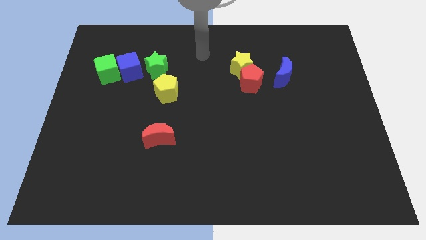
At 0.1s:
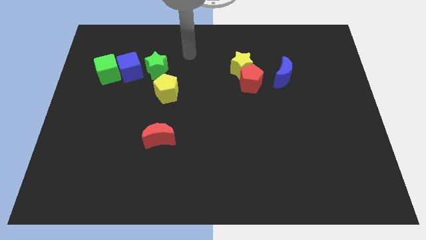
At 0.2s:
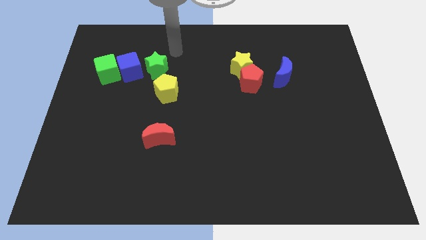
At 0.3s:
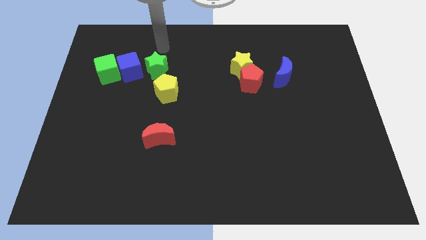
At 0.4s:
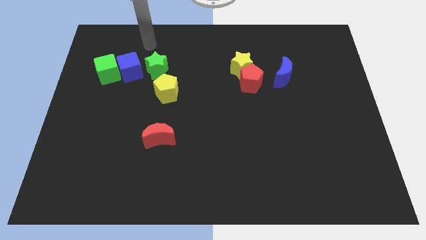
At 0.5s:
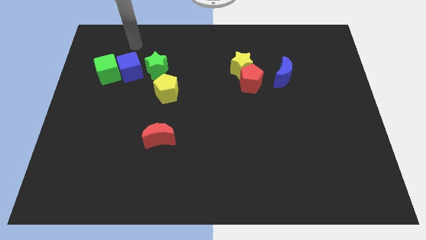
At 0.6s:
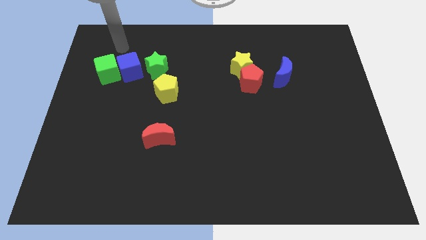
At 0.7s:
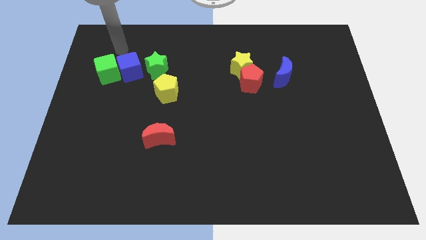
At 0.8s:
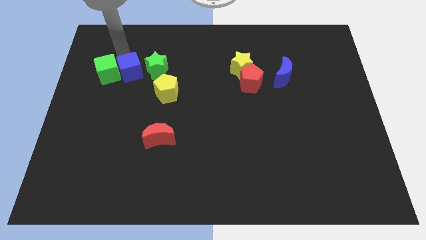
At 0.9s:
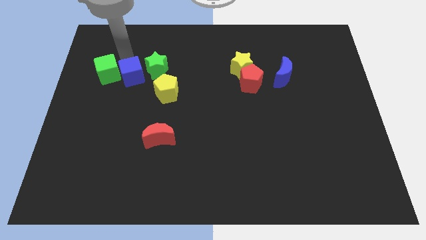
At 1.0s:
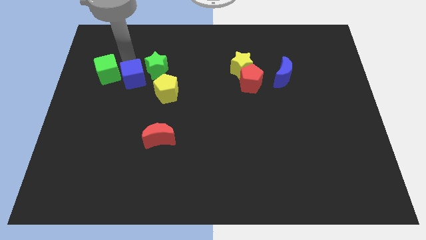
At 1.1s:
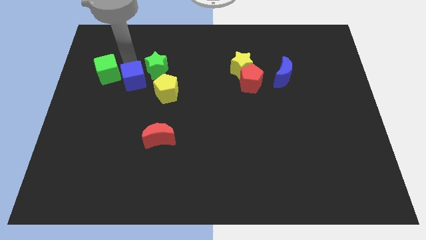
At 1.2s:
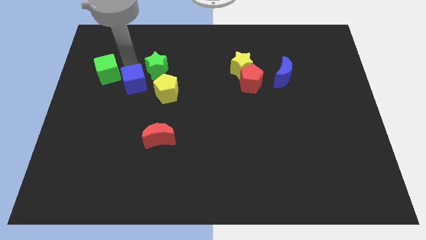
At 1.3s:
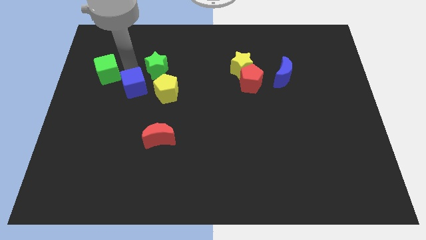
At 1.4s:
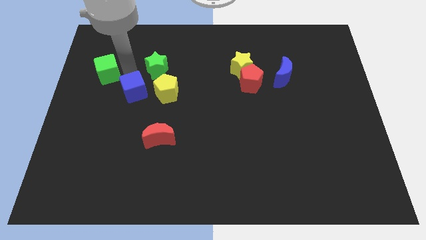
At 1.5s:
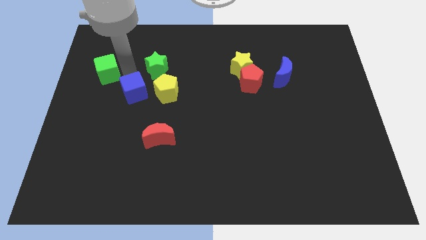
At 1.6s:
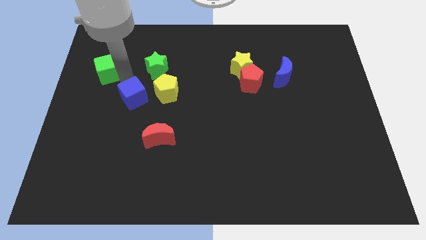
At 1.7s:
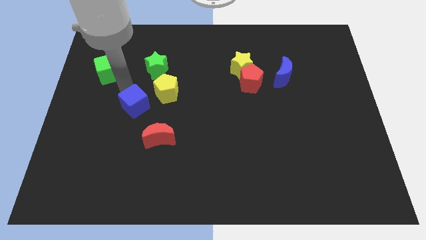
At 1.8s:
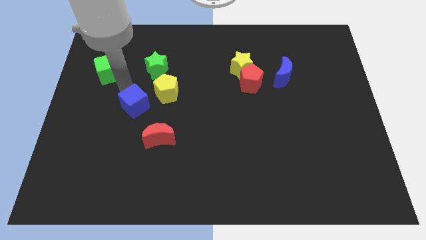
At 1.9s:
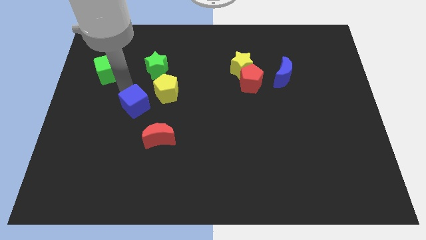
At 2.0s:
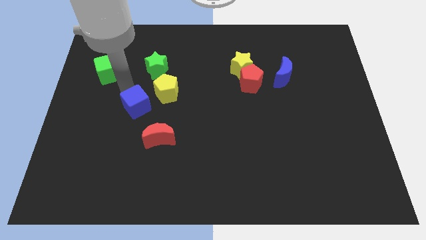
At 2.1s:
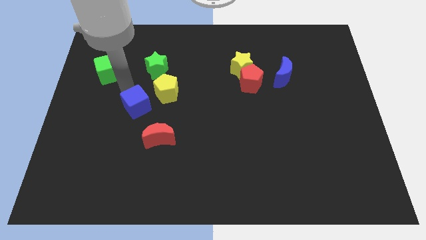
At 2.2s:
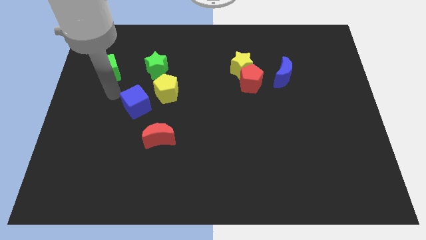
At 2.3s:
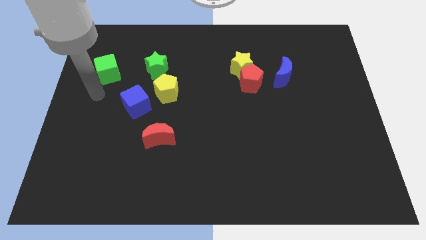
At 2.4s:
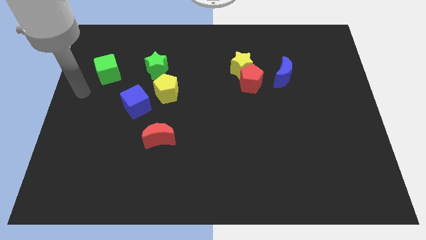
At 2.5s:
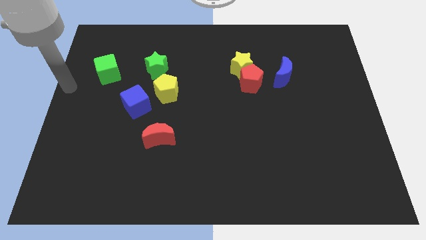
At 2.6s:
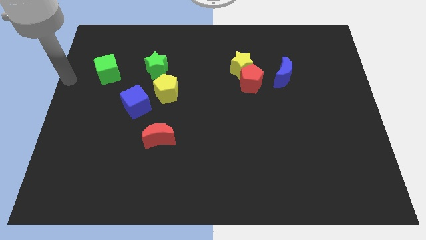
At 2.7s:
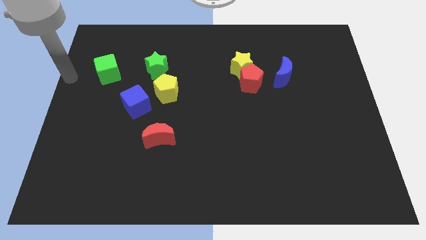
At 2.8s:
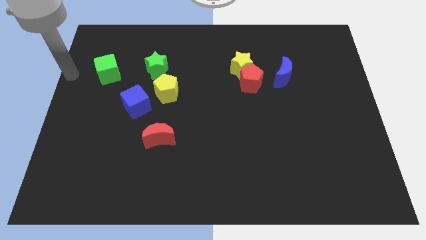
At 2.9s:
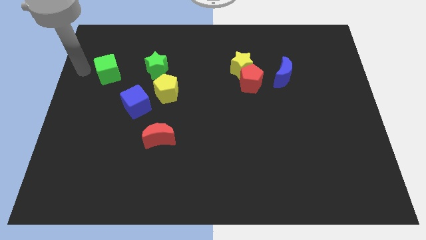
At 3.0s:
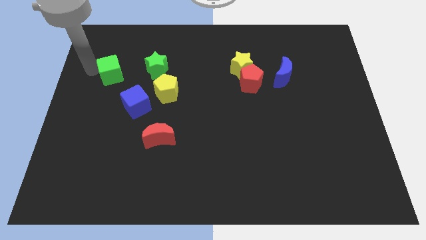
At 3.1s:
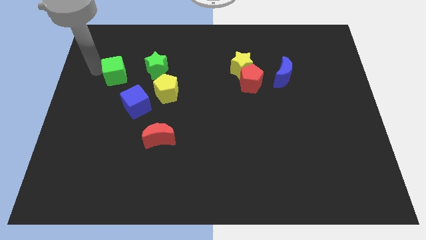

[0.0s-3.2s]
move the blue cube away from the green cube

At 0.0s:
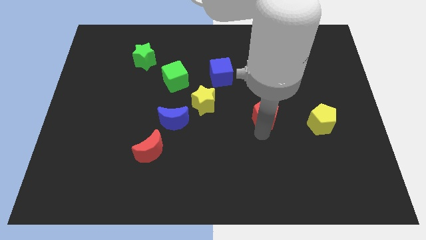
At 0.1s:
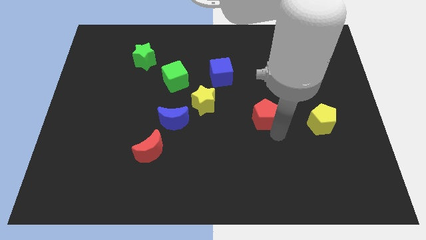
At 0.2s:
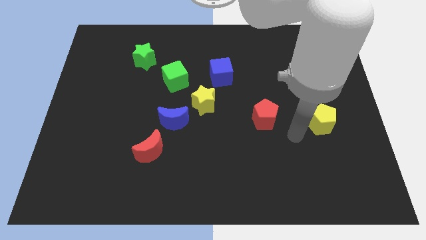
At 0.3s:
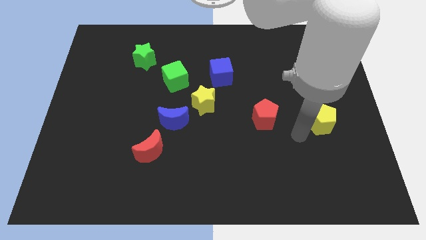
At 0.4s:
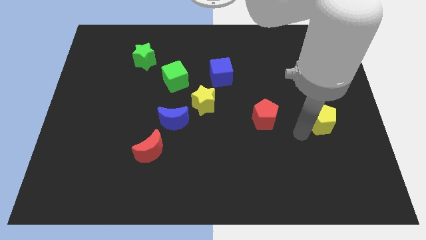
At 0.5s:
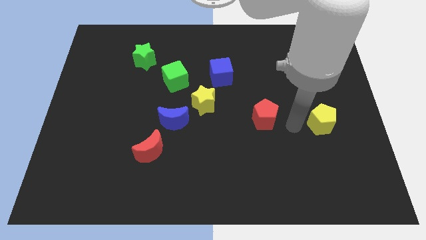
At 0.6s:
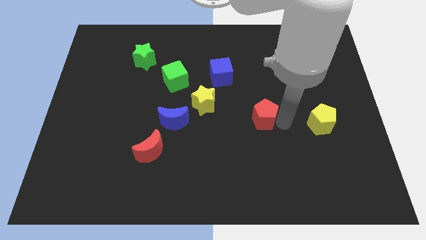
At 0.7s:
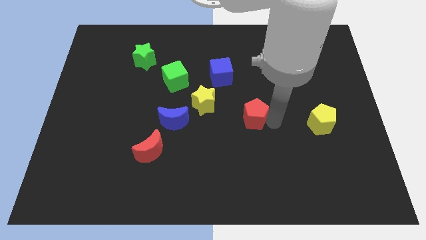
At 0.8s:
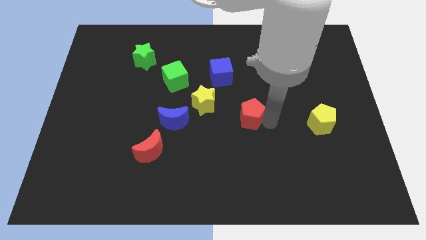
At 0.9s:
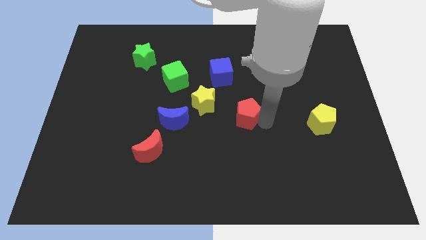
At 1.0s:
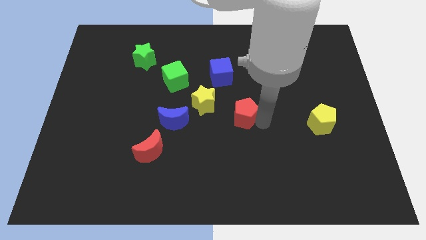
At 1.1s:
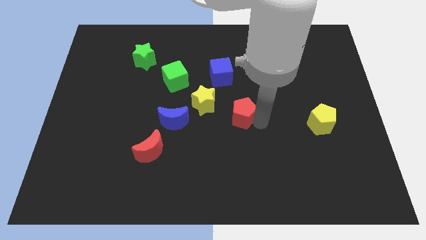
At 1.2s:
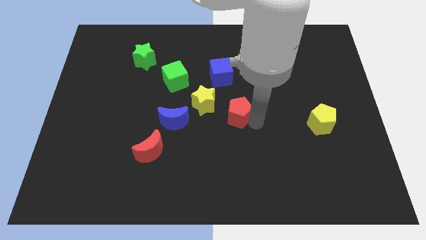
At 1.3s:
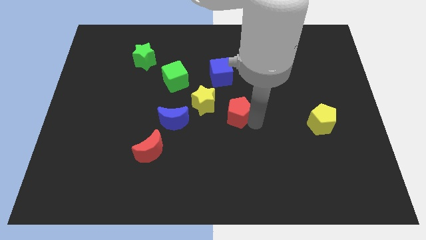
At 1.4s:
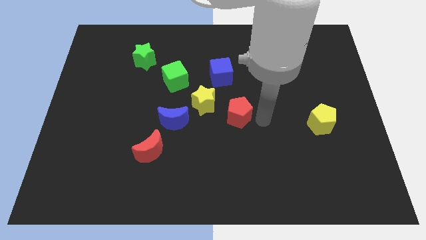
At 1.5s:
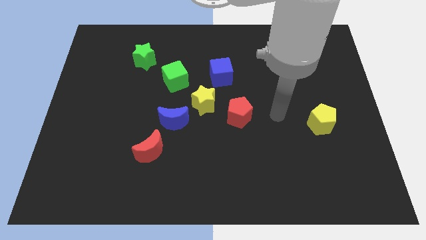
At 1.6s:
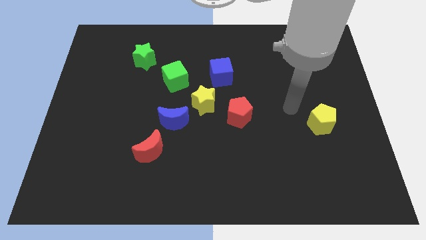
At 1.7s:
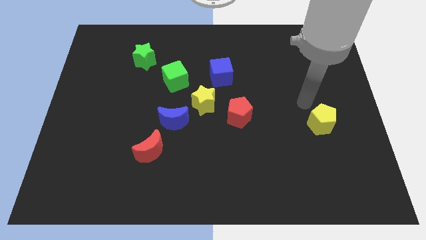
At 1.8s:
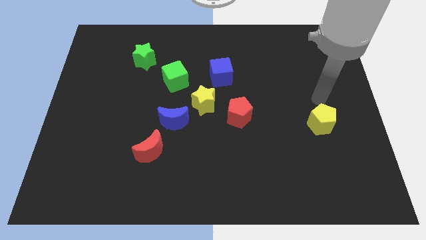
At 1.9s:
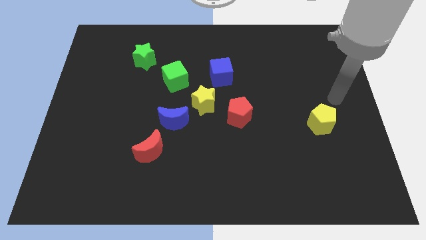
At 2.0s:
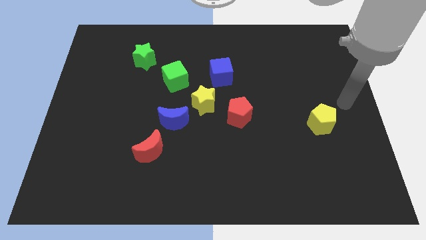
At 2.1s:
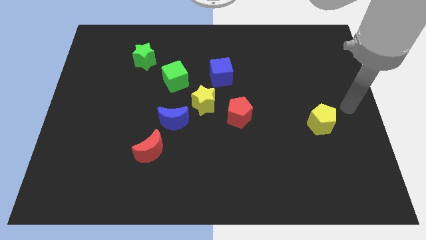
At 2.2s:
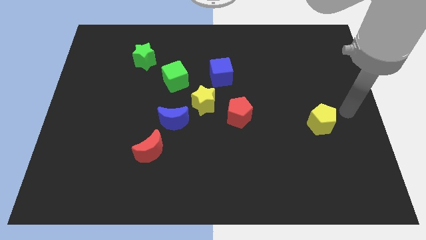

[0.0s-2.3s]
push the red pentagon to the bottom of the blue cube

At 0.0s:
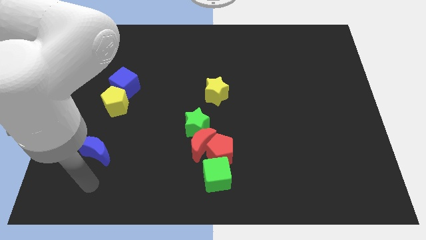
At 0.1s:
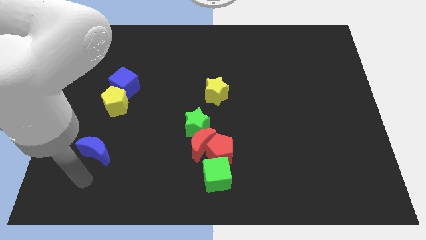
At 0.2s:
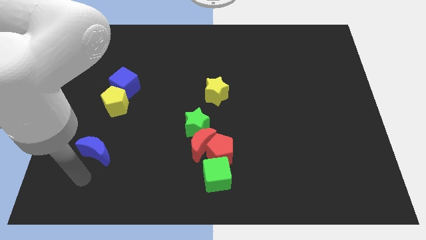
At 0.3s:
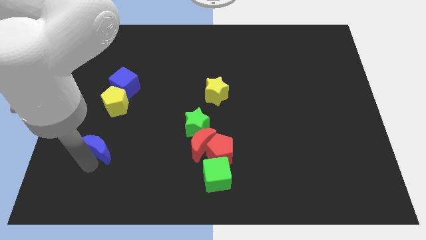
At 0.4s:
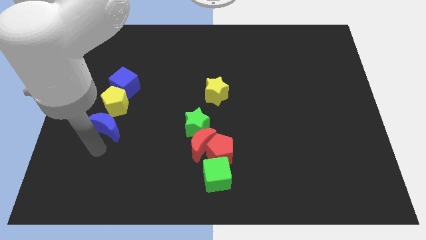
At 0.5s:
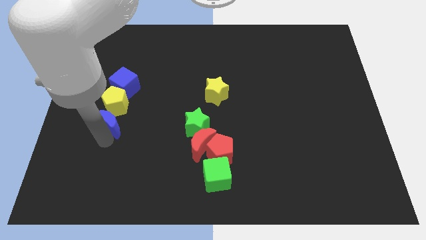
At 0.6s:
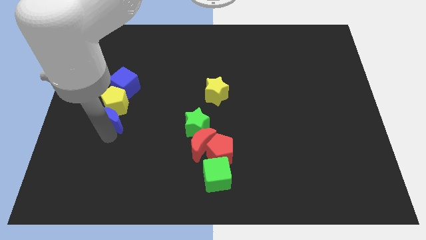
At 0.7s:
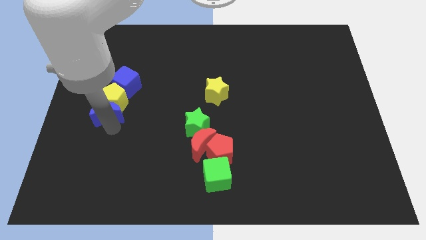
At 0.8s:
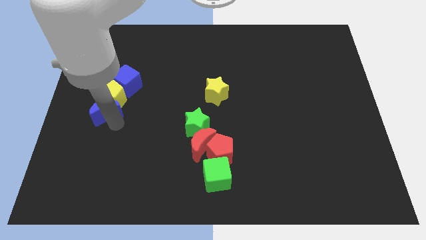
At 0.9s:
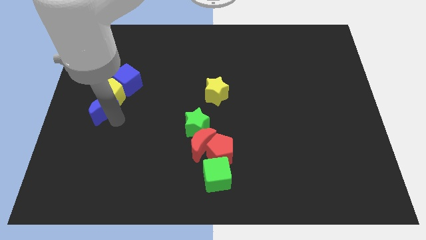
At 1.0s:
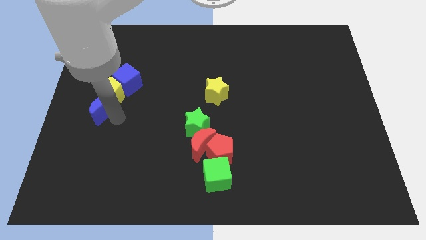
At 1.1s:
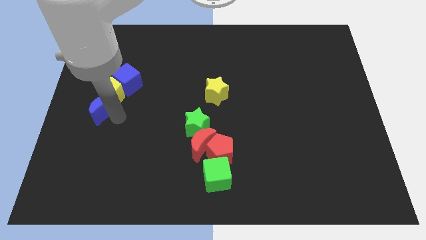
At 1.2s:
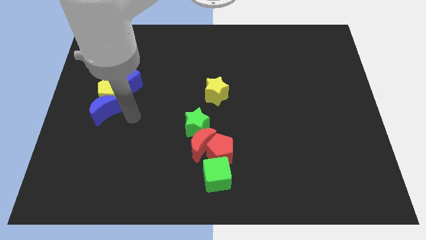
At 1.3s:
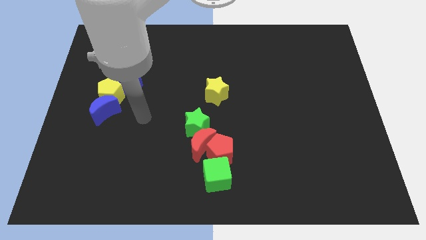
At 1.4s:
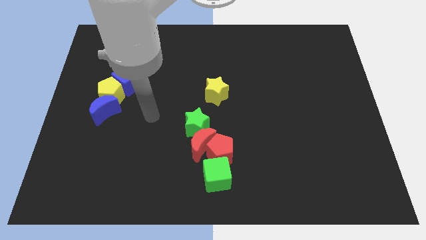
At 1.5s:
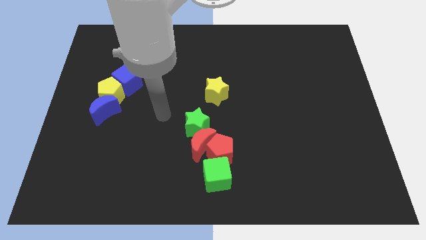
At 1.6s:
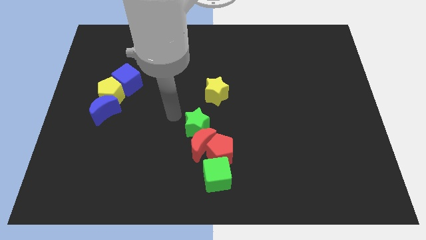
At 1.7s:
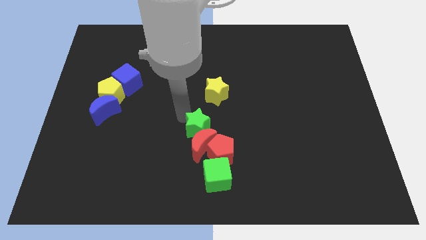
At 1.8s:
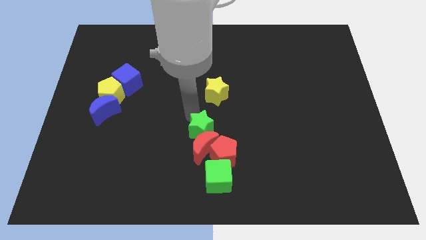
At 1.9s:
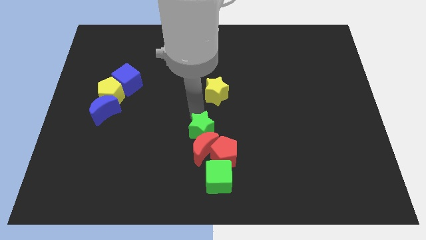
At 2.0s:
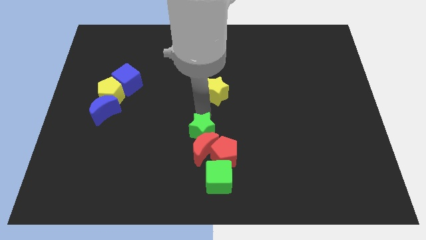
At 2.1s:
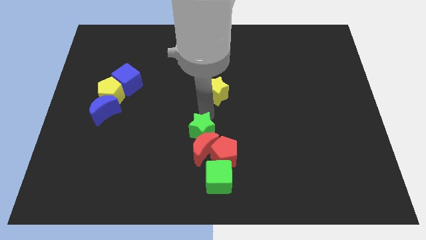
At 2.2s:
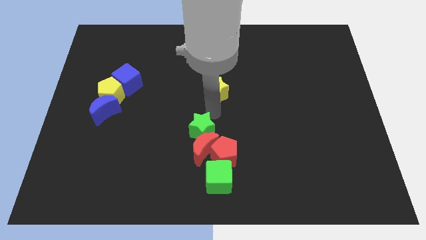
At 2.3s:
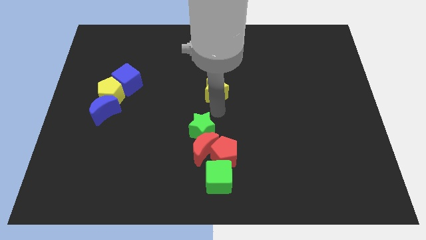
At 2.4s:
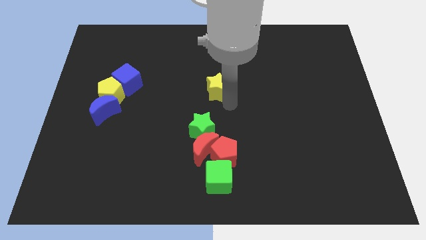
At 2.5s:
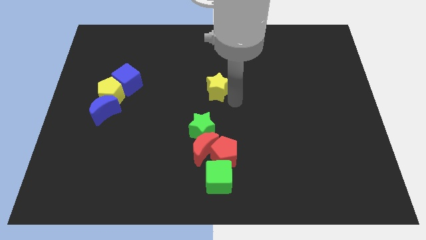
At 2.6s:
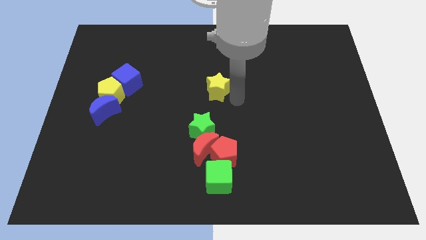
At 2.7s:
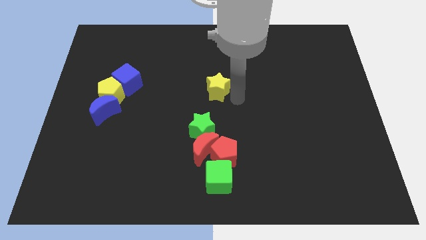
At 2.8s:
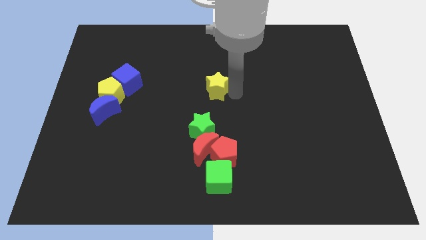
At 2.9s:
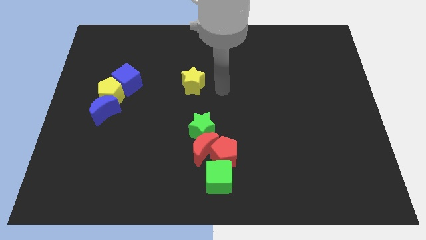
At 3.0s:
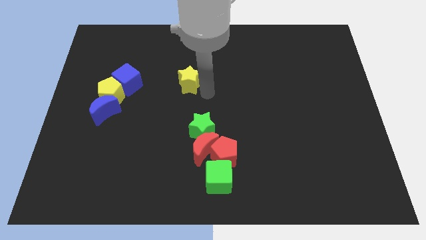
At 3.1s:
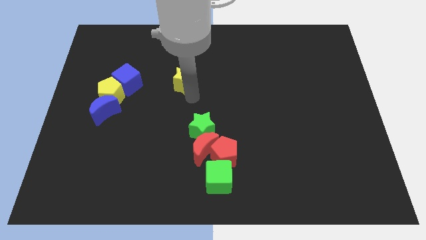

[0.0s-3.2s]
move the yellow star to the right side of the blue cube

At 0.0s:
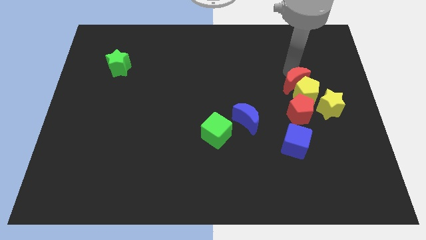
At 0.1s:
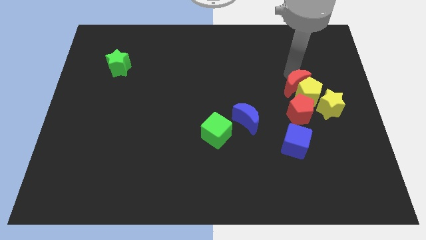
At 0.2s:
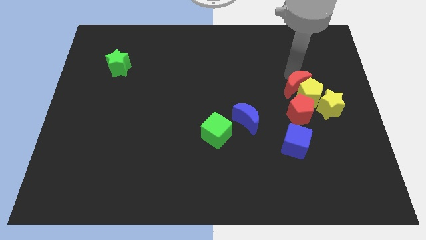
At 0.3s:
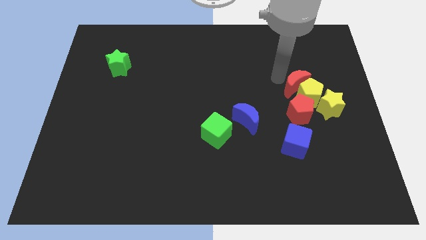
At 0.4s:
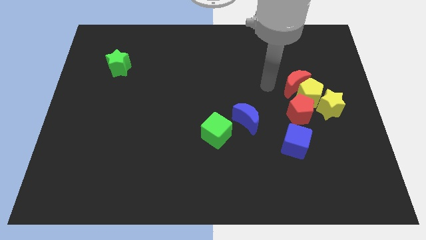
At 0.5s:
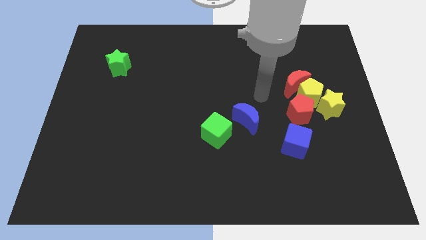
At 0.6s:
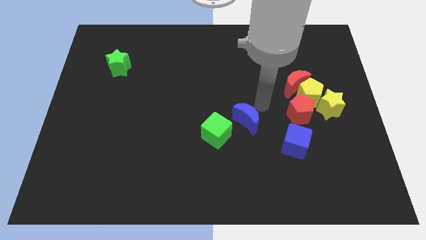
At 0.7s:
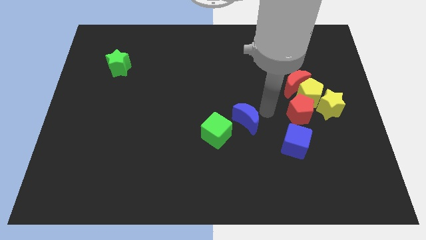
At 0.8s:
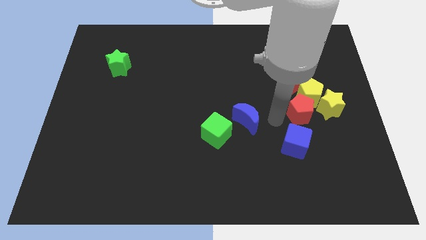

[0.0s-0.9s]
move your arm away from red moon
